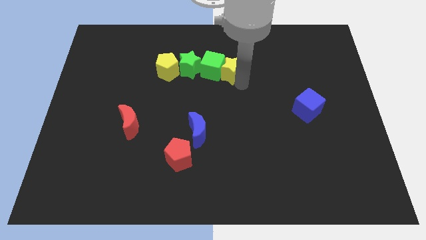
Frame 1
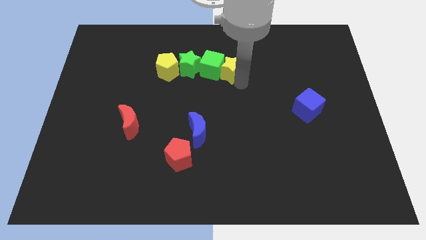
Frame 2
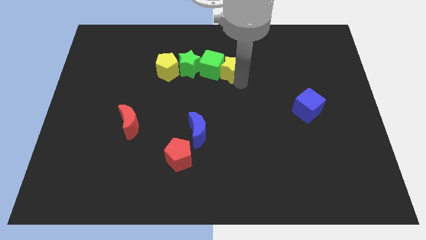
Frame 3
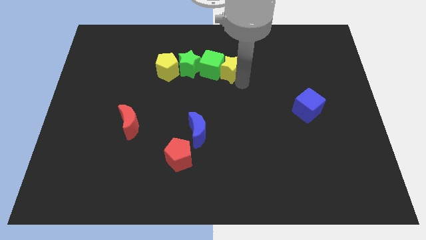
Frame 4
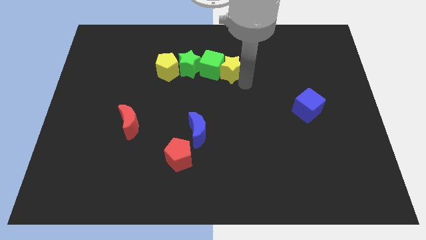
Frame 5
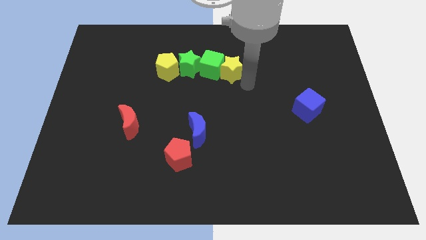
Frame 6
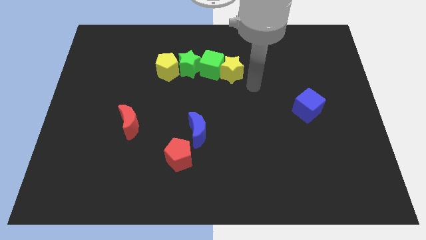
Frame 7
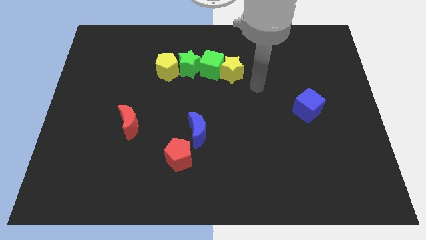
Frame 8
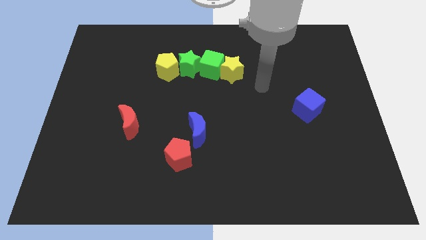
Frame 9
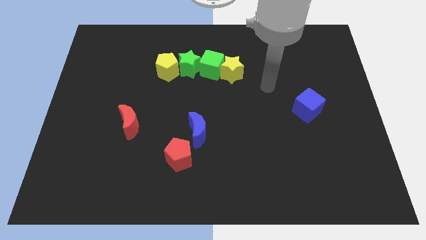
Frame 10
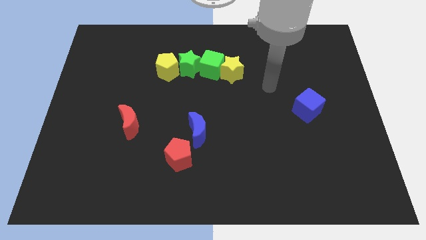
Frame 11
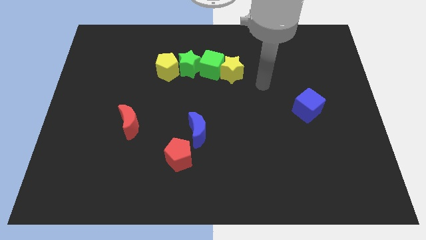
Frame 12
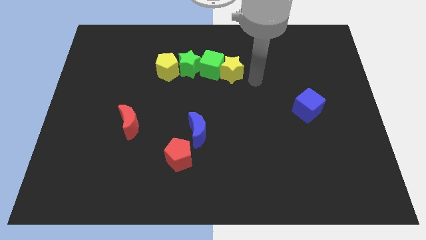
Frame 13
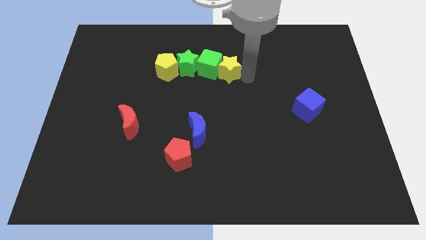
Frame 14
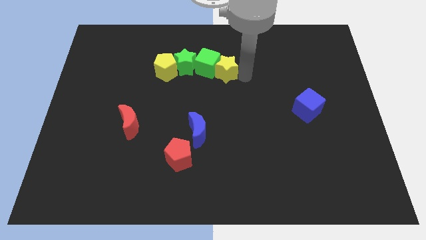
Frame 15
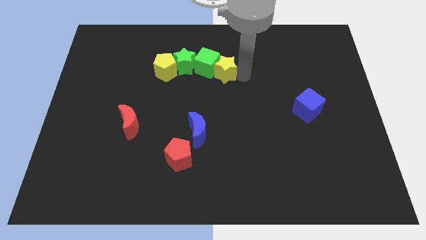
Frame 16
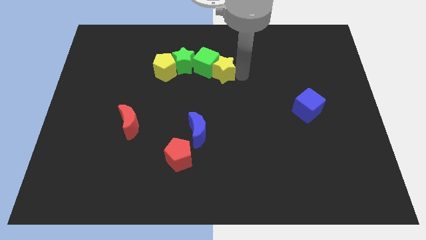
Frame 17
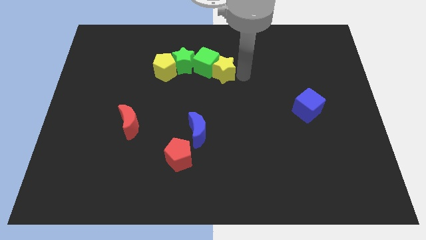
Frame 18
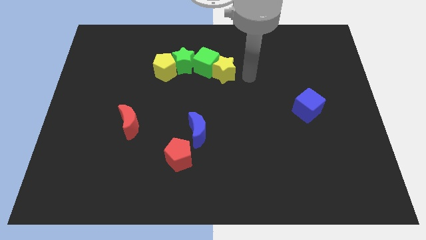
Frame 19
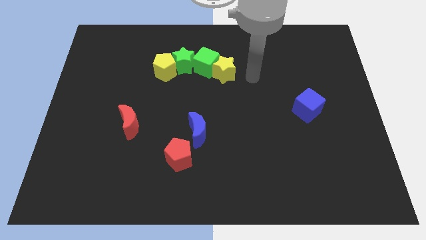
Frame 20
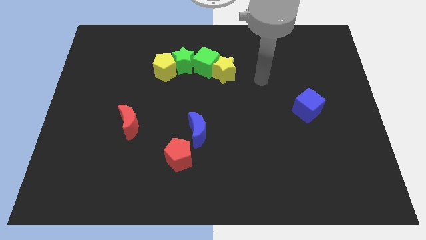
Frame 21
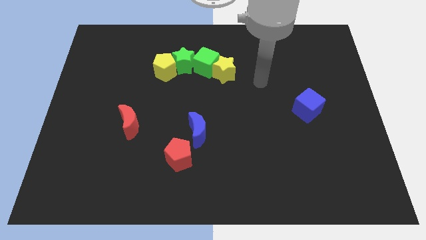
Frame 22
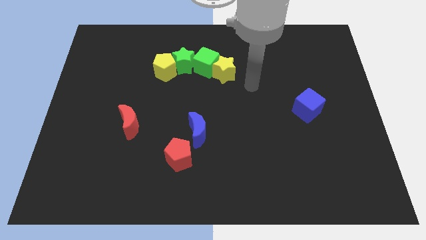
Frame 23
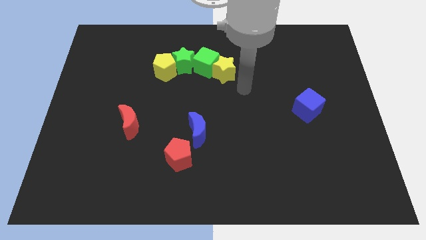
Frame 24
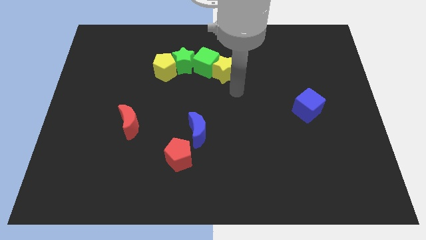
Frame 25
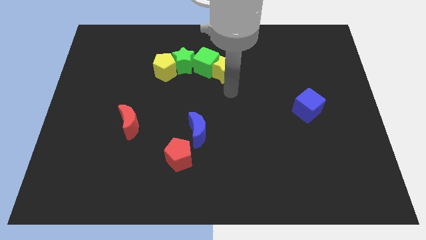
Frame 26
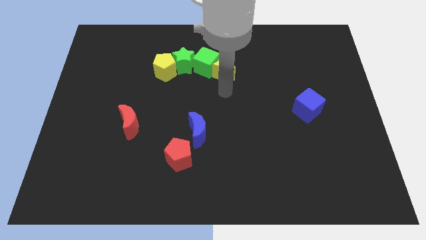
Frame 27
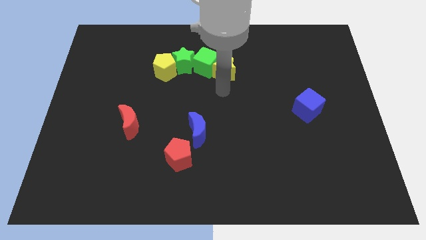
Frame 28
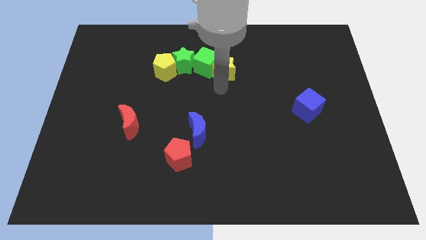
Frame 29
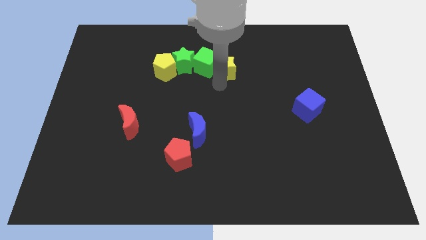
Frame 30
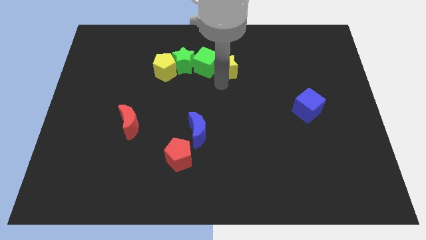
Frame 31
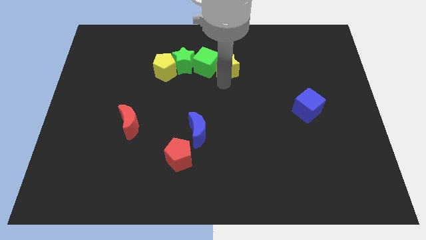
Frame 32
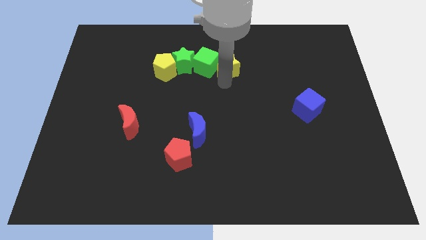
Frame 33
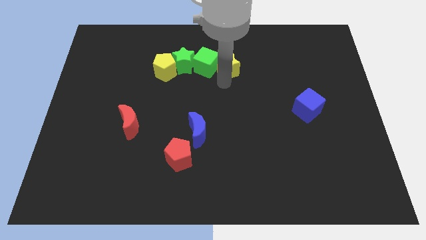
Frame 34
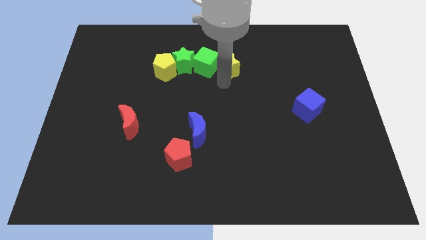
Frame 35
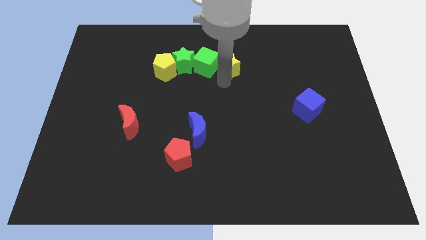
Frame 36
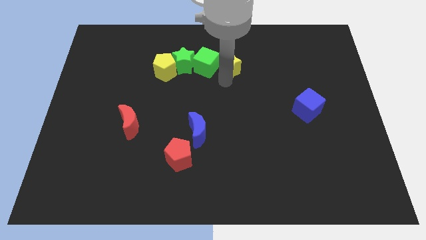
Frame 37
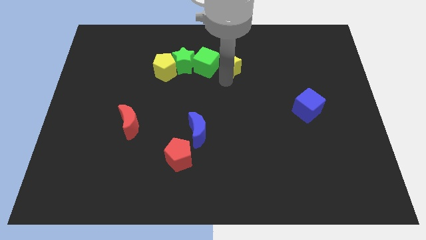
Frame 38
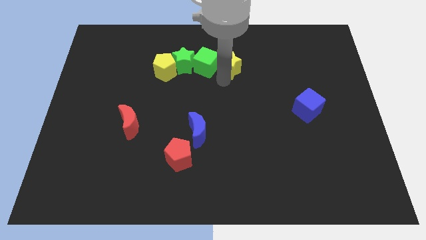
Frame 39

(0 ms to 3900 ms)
adjust the yellow star at the right side of the green cube

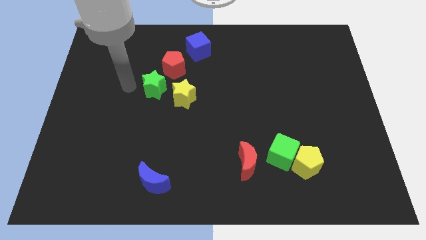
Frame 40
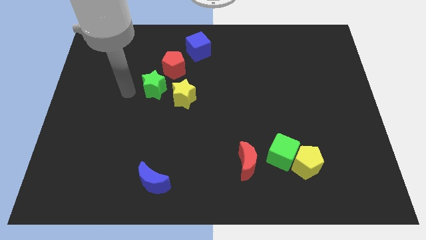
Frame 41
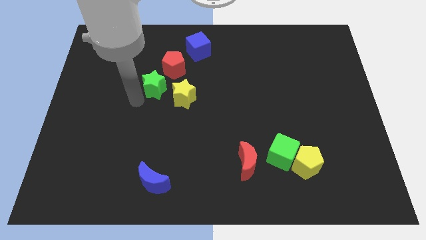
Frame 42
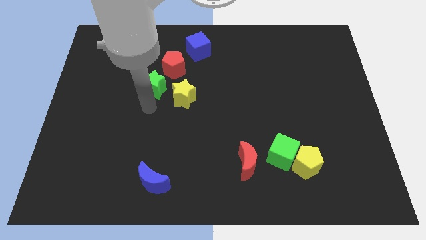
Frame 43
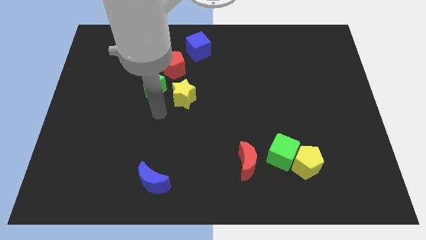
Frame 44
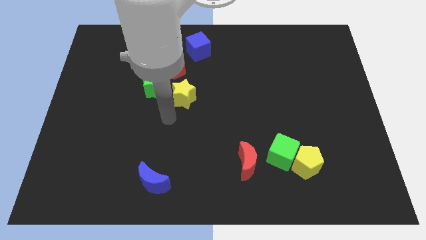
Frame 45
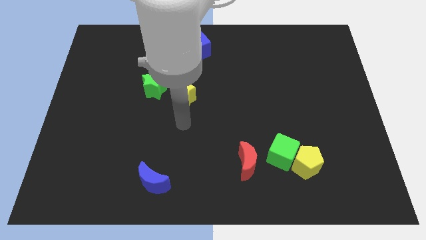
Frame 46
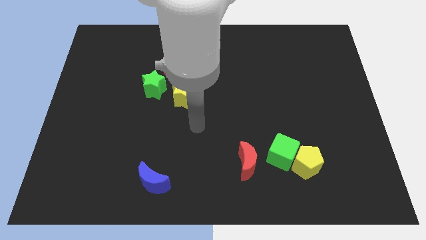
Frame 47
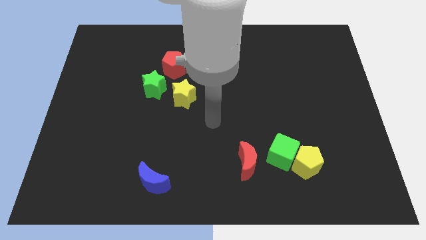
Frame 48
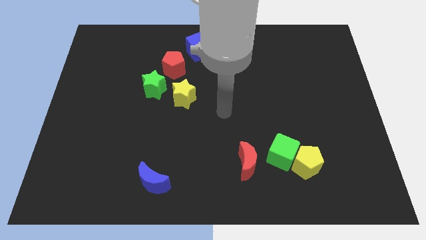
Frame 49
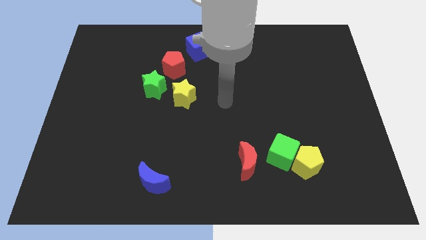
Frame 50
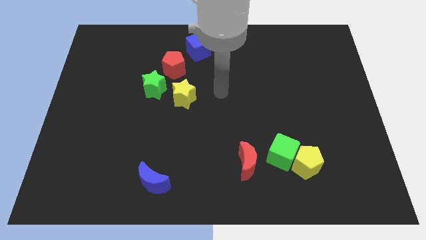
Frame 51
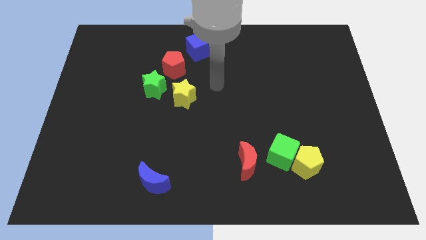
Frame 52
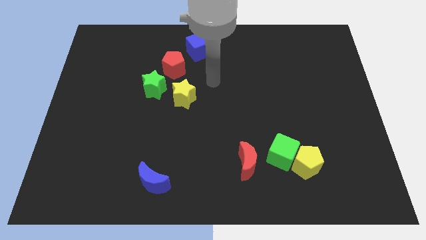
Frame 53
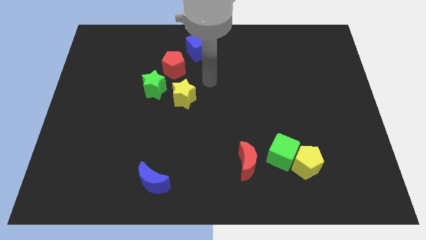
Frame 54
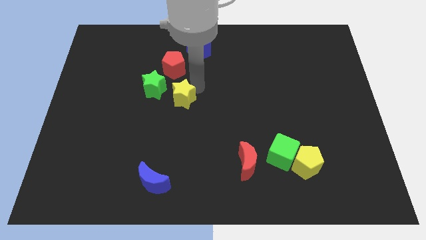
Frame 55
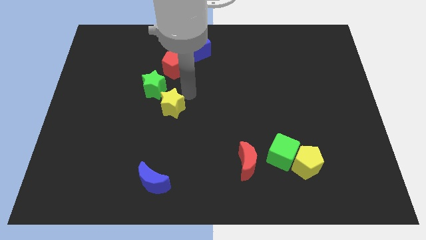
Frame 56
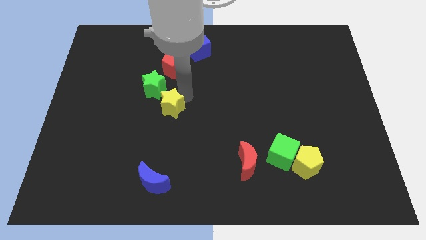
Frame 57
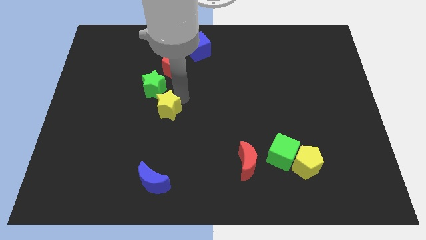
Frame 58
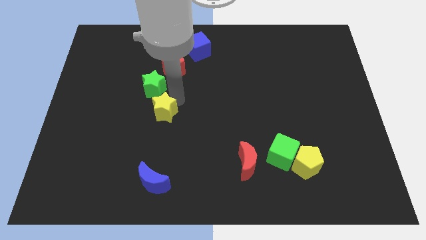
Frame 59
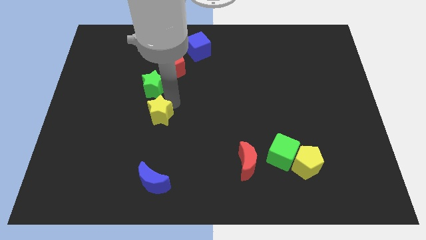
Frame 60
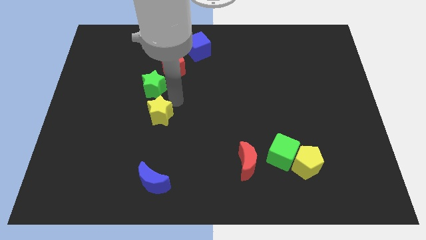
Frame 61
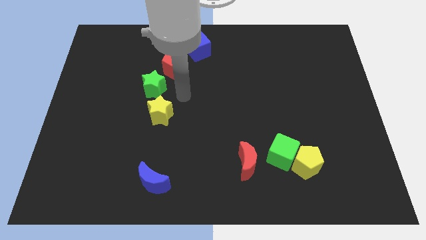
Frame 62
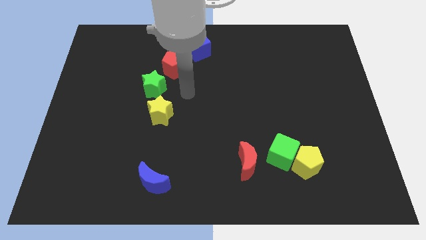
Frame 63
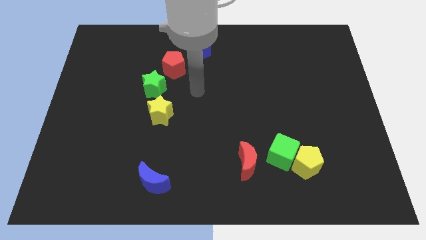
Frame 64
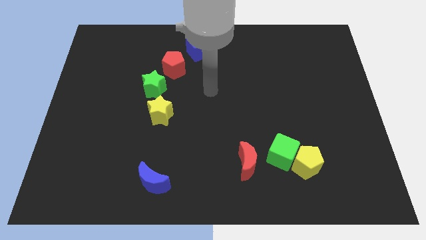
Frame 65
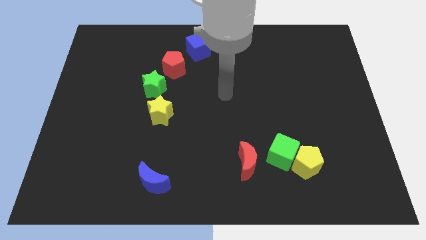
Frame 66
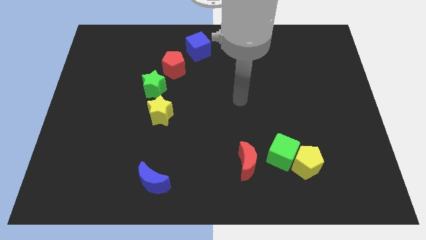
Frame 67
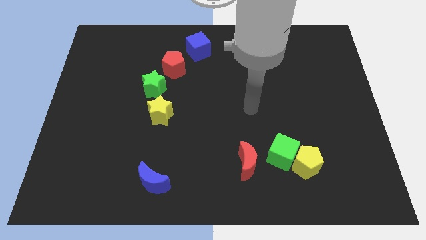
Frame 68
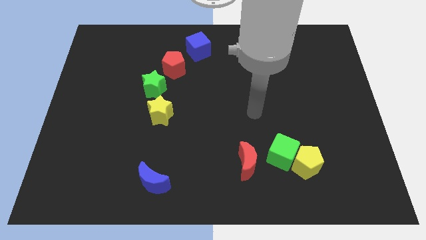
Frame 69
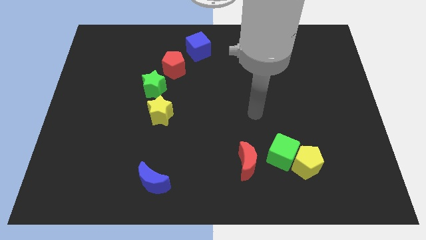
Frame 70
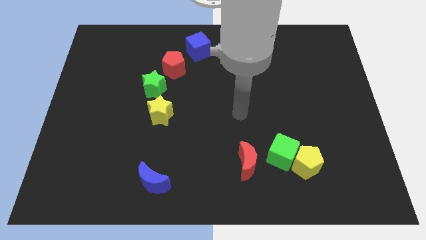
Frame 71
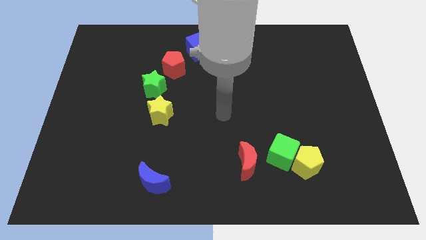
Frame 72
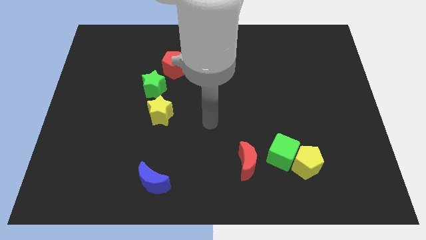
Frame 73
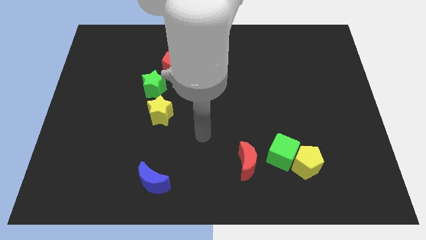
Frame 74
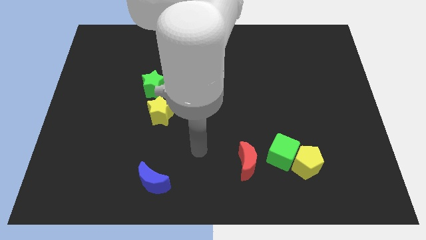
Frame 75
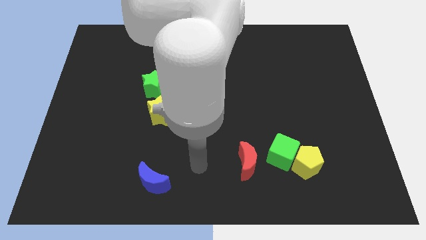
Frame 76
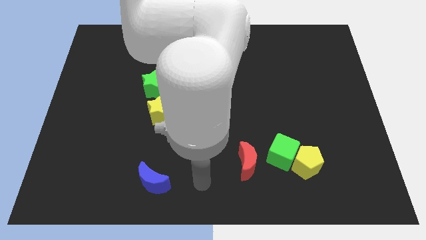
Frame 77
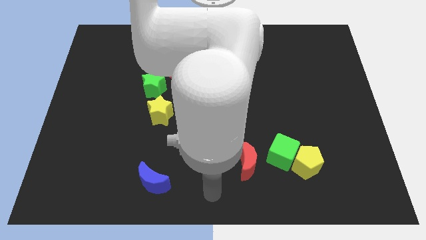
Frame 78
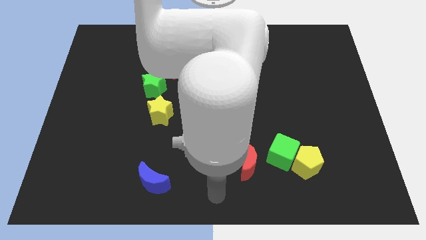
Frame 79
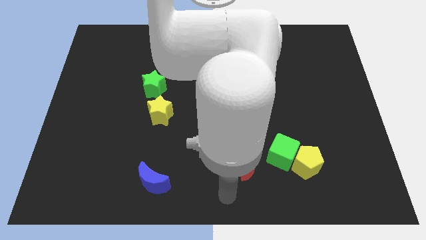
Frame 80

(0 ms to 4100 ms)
slide the yellow pentagon at the bottom of the green star

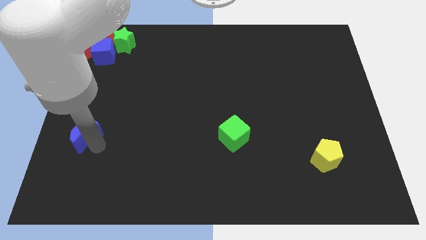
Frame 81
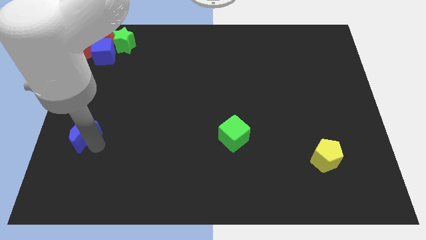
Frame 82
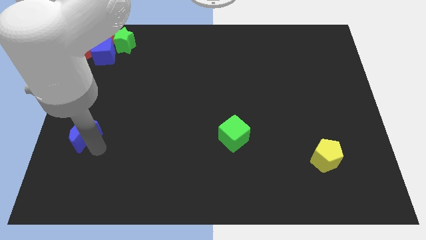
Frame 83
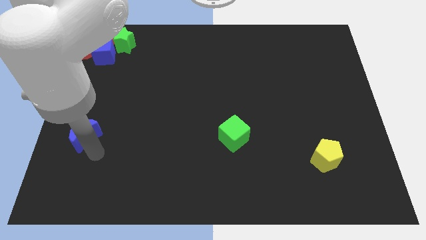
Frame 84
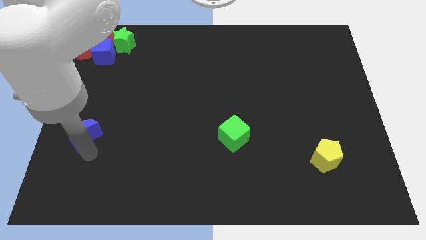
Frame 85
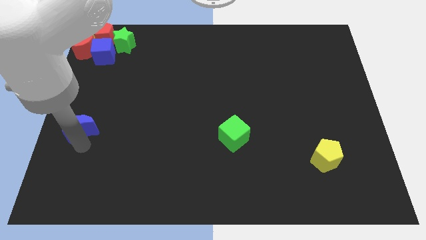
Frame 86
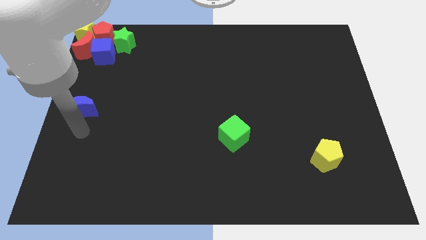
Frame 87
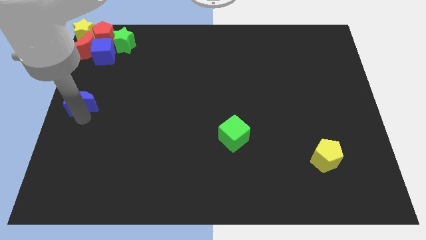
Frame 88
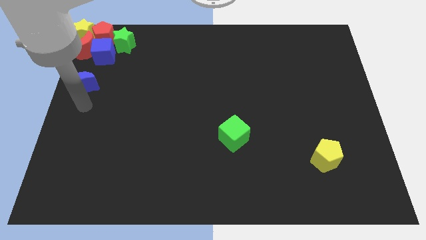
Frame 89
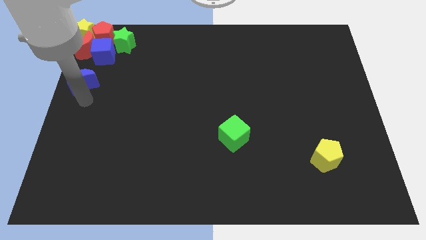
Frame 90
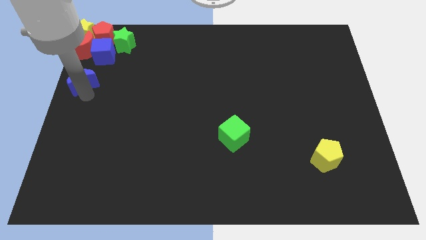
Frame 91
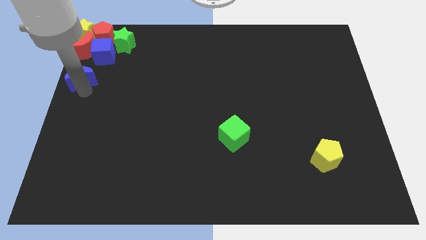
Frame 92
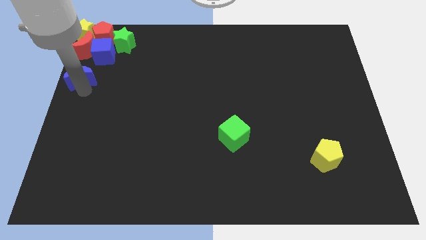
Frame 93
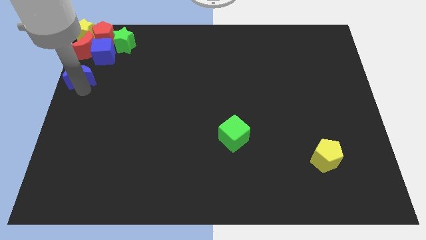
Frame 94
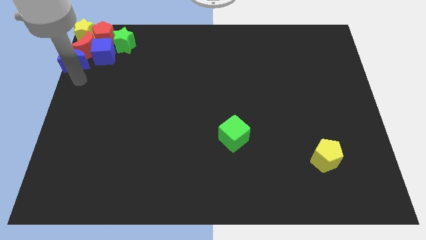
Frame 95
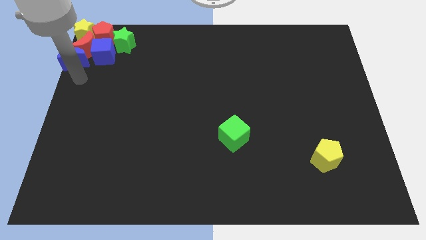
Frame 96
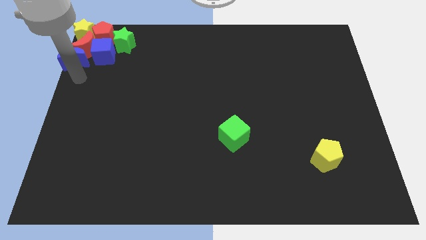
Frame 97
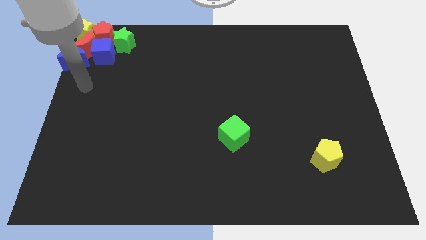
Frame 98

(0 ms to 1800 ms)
push the blue crescent to the bottom of the red crescent
